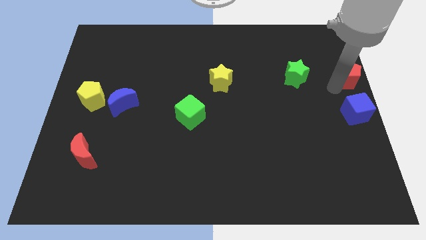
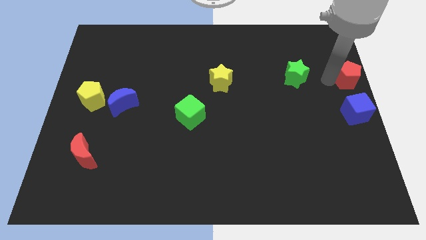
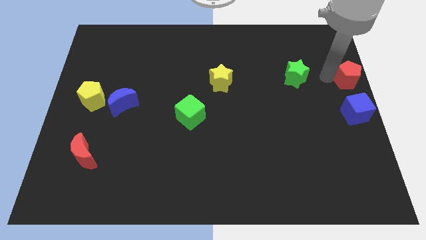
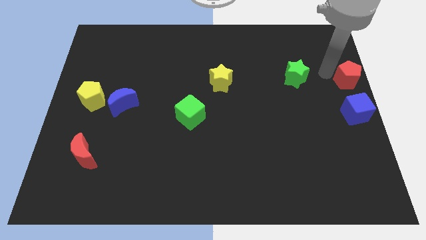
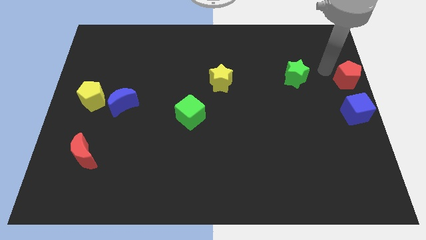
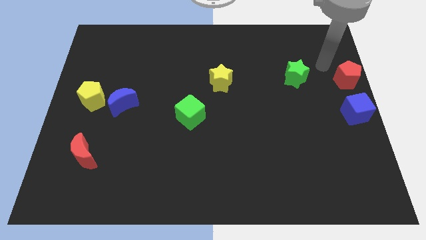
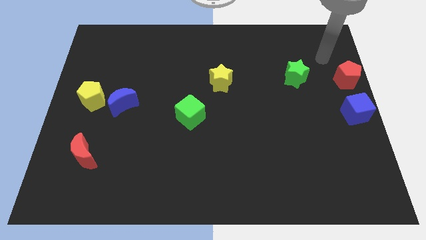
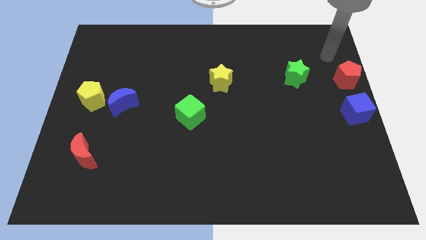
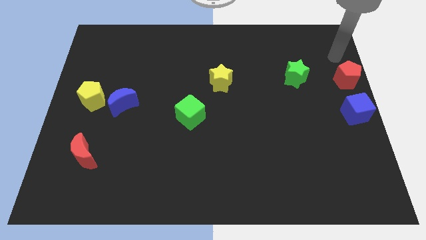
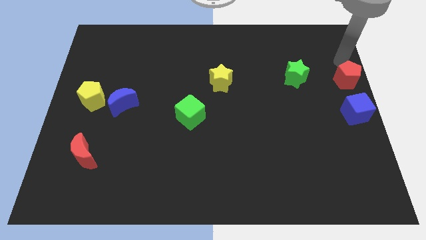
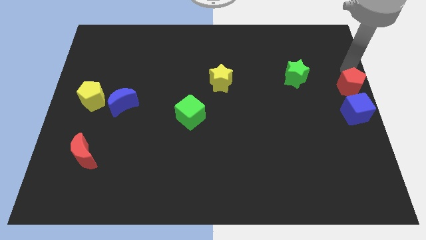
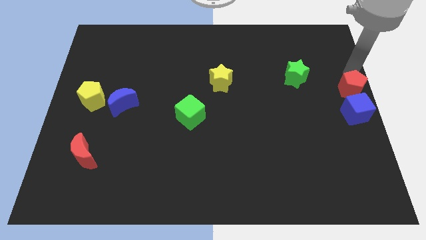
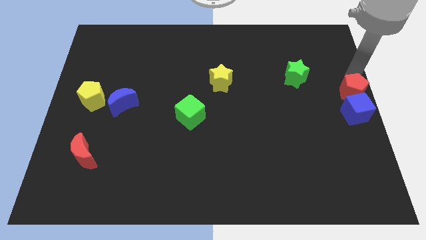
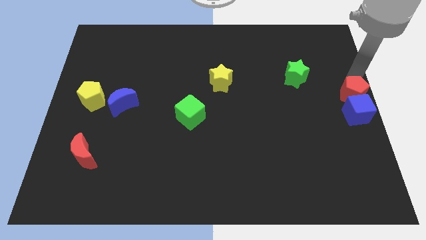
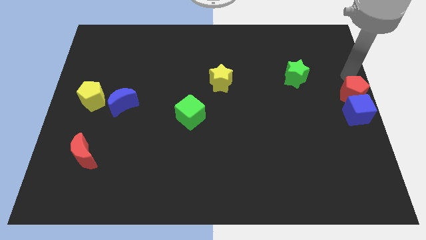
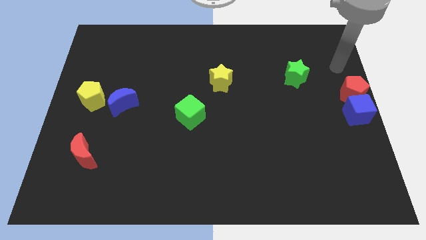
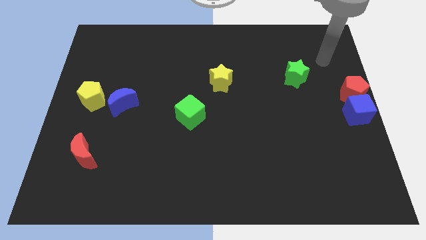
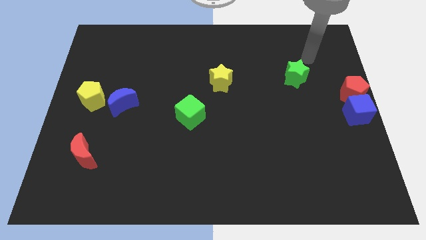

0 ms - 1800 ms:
push the red pentagon top side of the blue cube

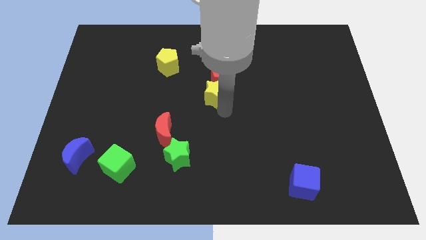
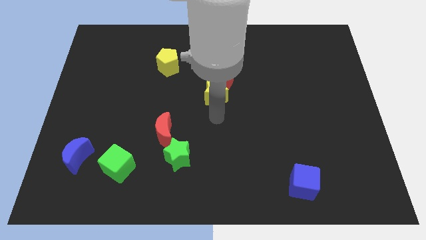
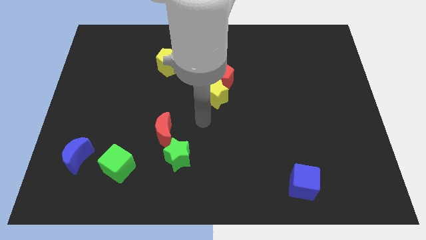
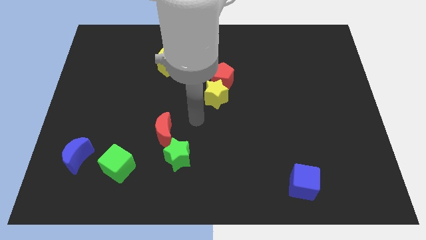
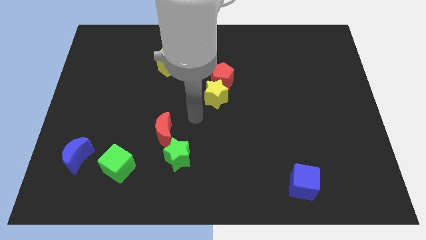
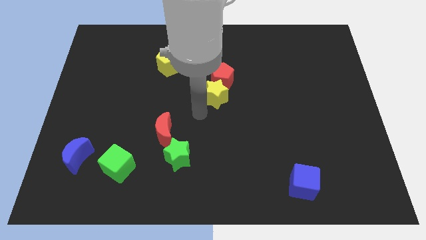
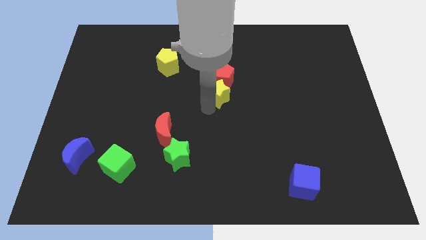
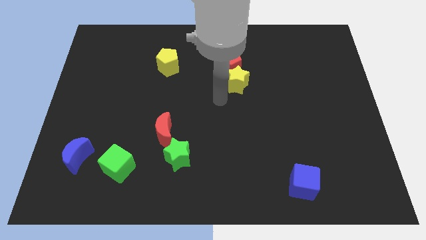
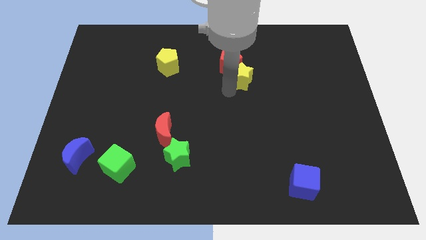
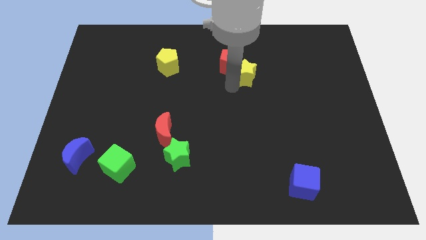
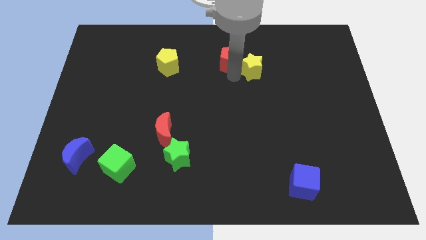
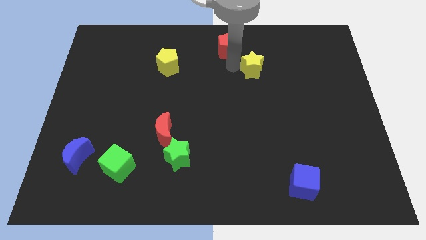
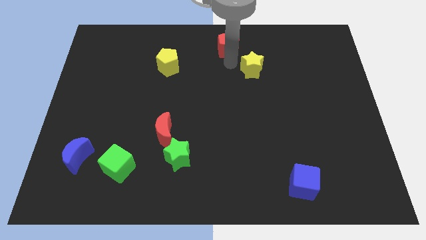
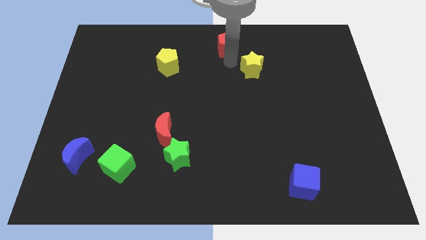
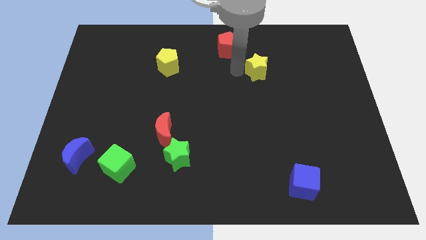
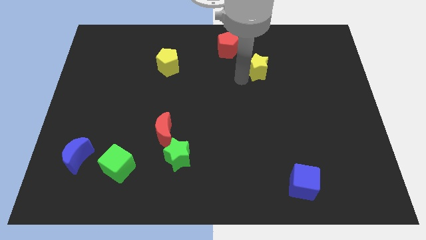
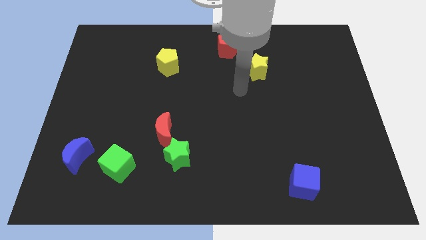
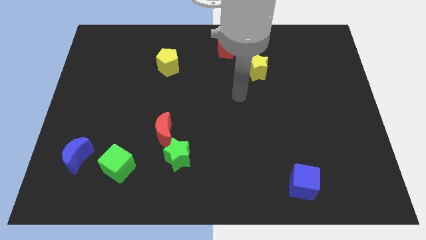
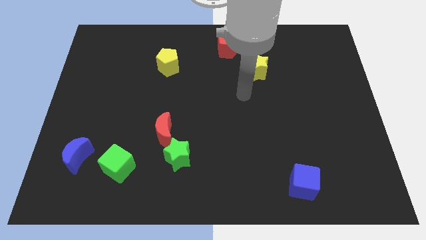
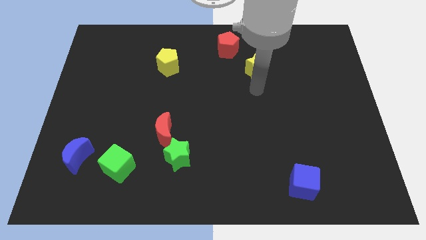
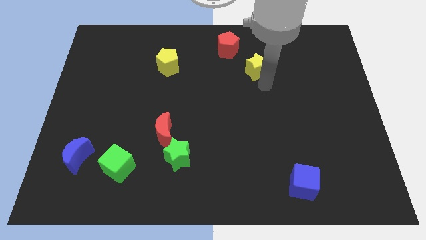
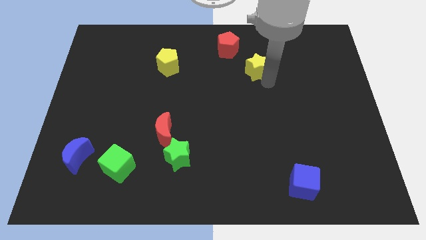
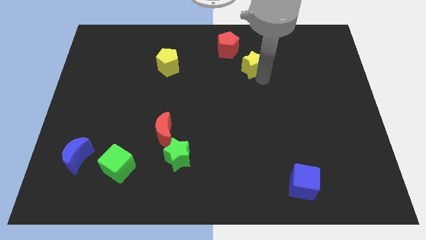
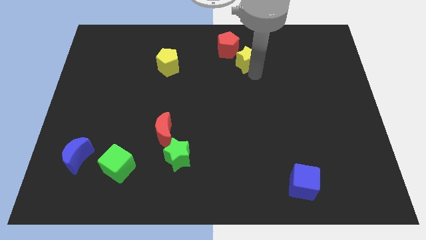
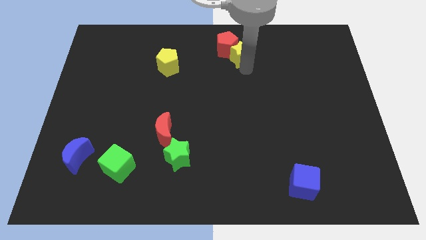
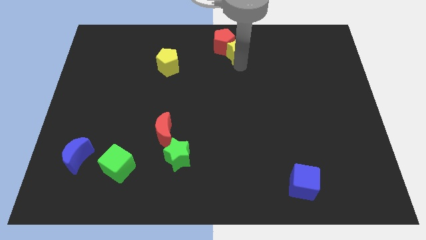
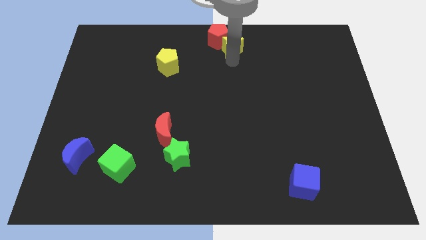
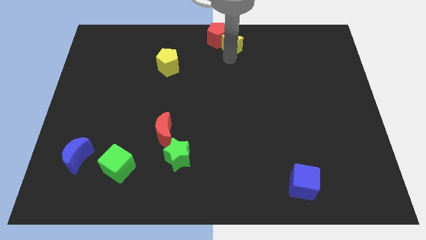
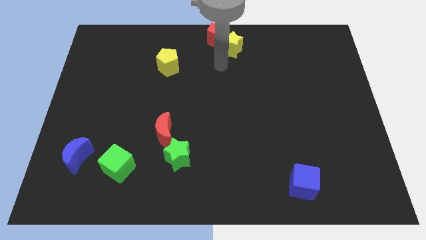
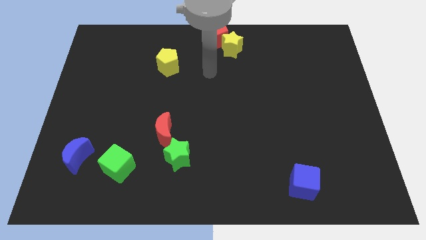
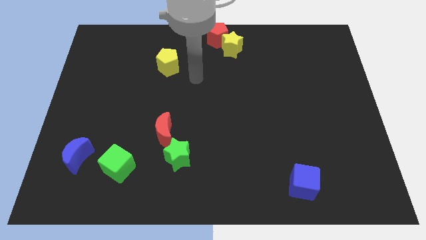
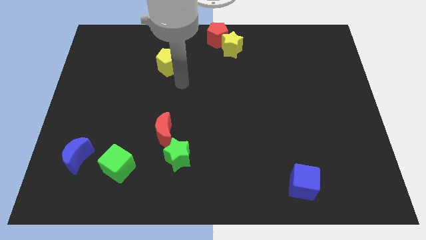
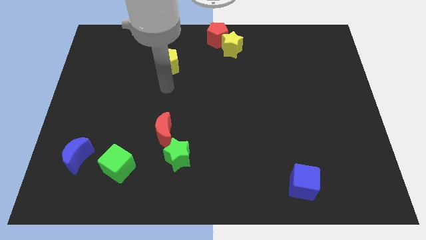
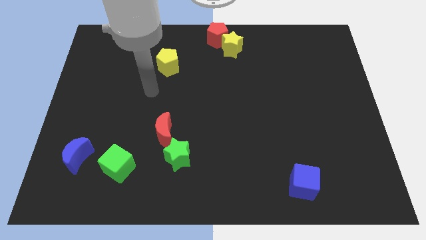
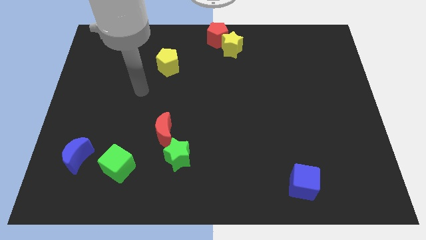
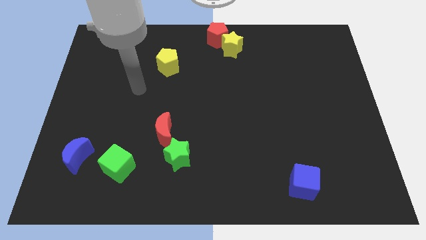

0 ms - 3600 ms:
move yellow star along with red pentagon to center top

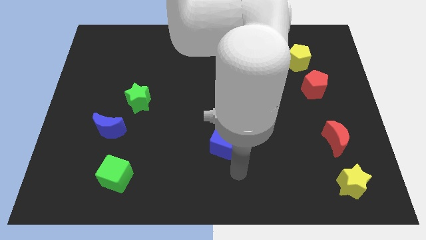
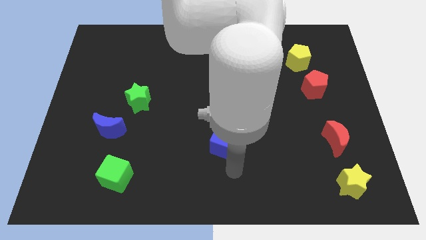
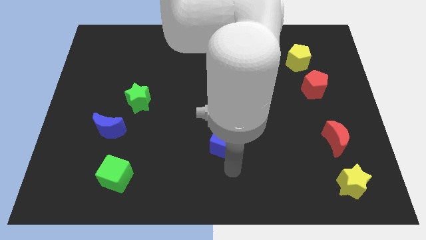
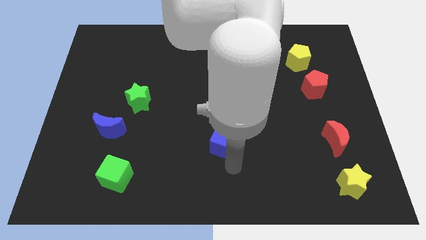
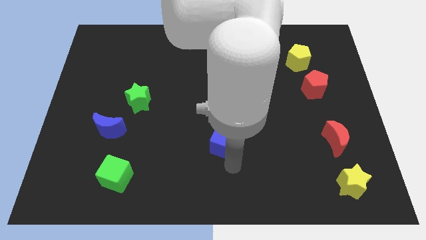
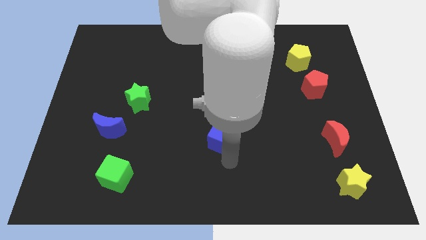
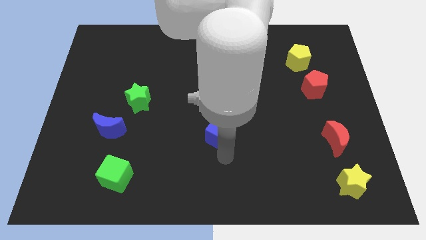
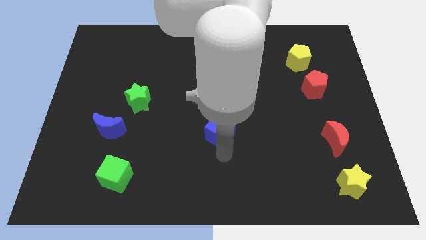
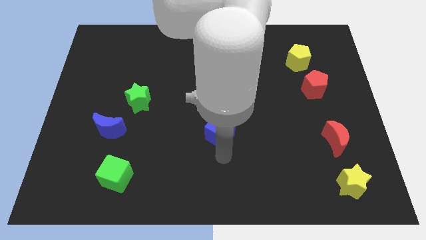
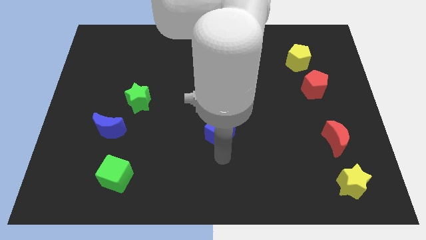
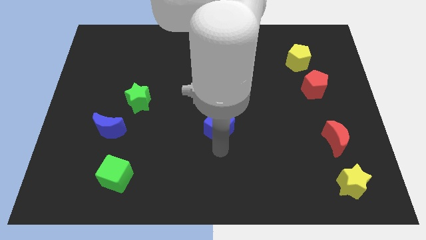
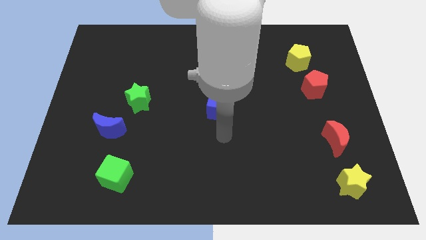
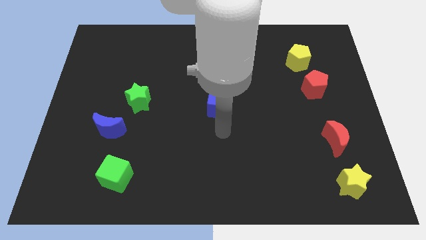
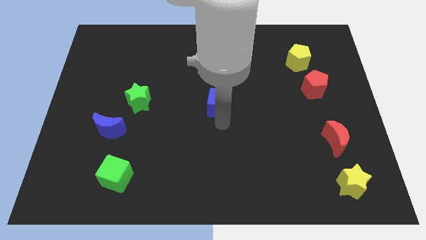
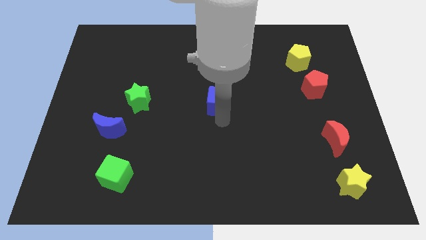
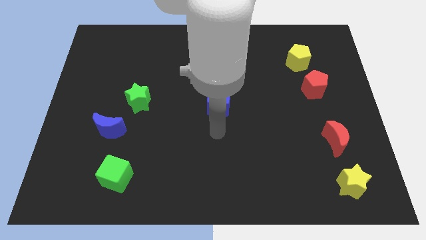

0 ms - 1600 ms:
push the blue cube to the center of the board

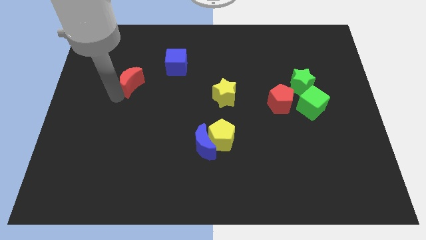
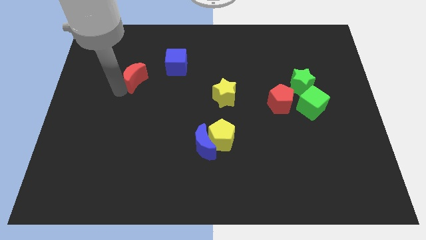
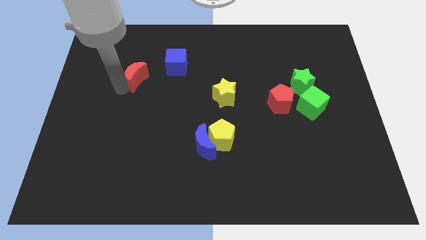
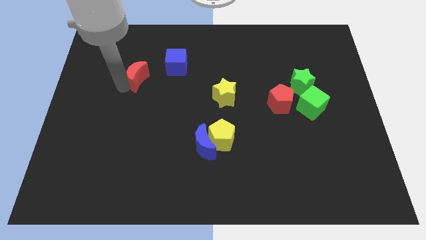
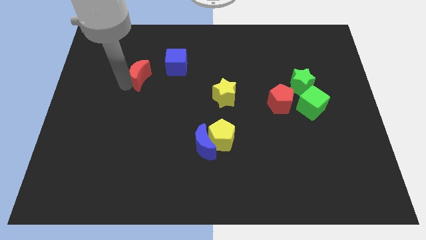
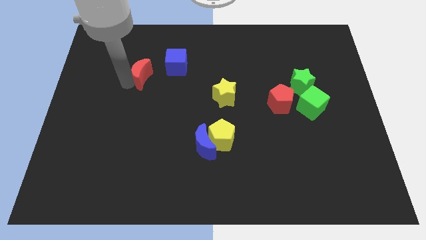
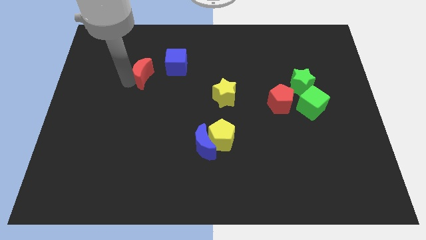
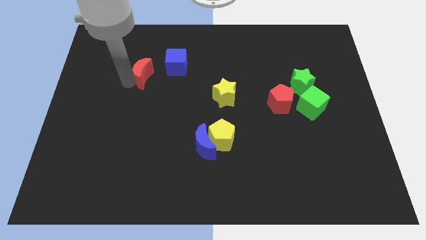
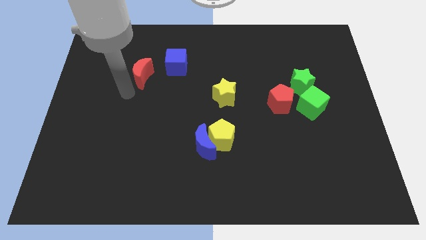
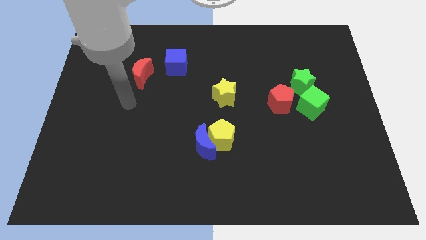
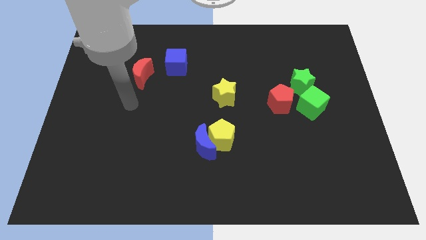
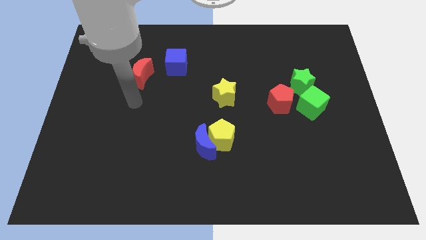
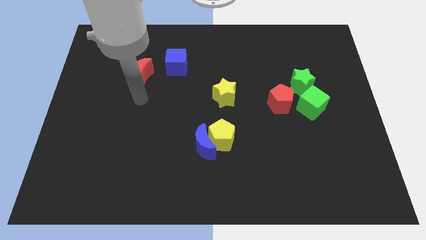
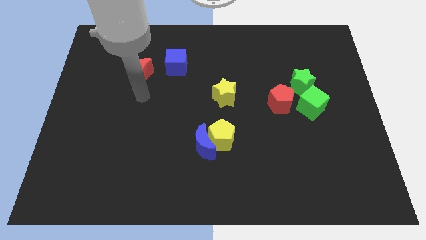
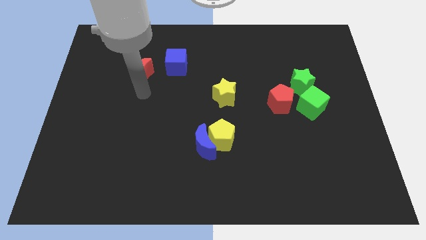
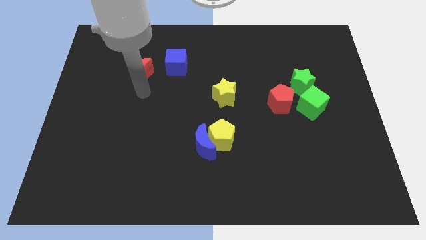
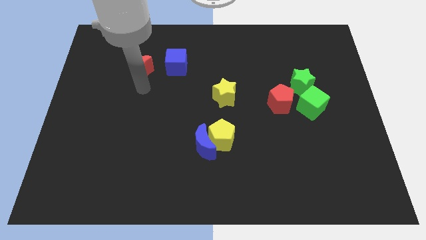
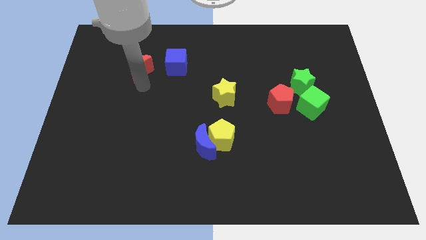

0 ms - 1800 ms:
move the red crescent left beside the blue cube

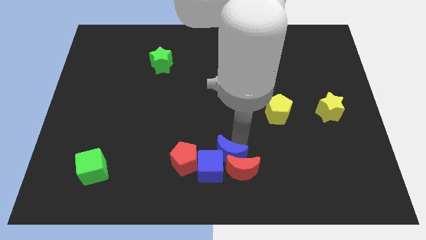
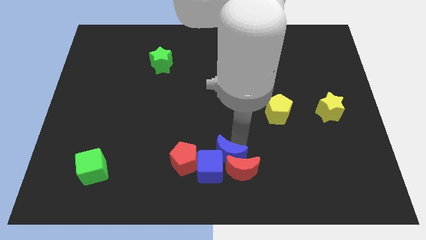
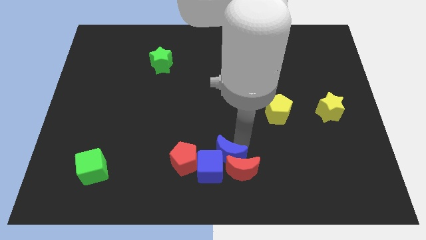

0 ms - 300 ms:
move your arm away from blue moon
